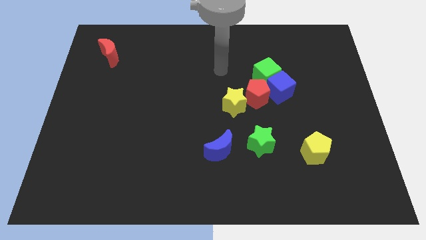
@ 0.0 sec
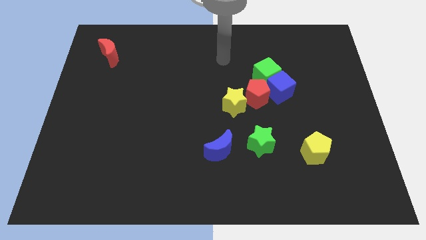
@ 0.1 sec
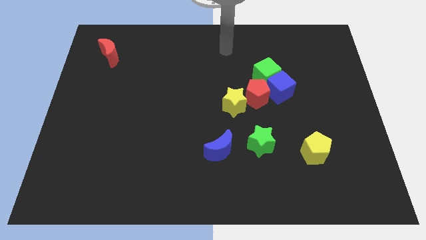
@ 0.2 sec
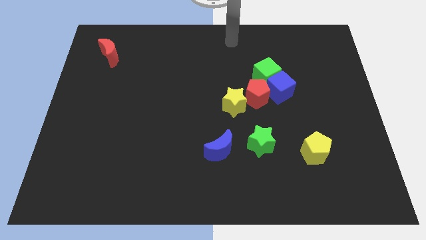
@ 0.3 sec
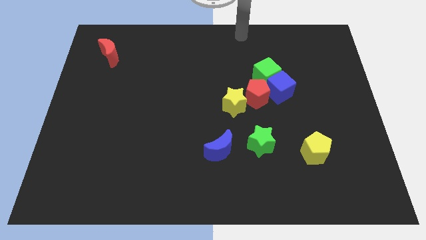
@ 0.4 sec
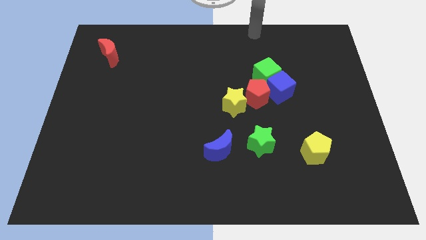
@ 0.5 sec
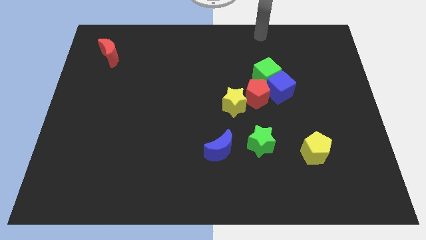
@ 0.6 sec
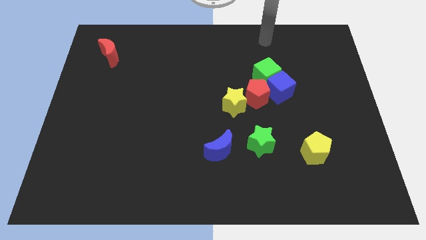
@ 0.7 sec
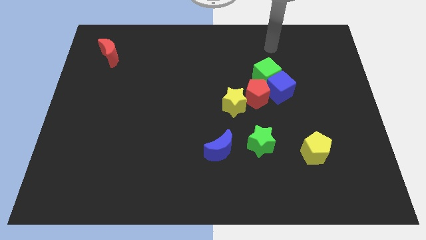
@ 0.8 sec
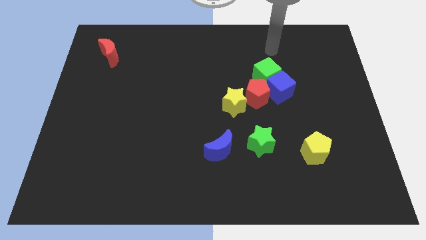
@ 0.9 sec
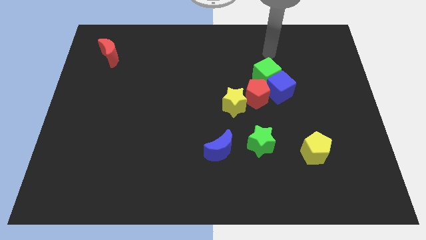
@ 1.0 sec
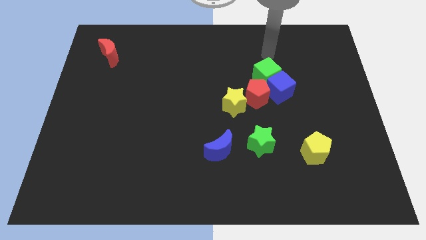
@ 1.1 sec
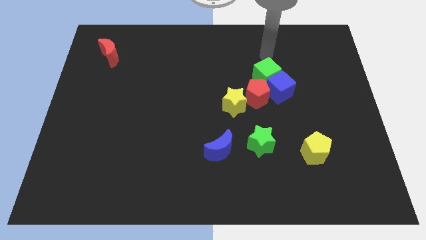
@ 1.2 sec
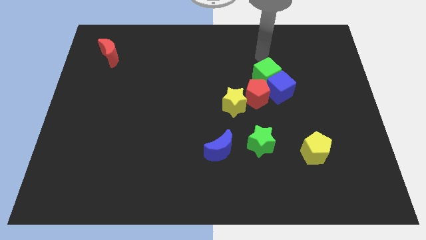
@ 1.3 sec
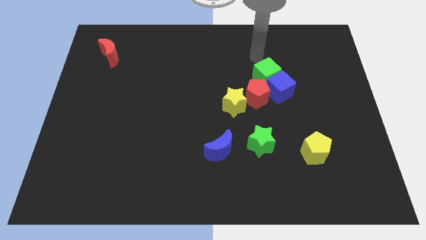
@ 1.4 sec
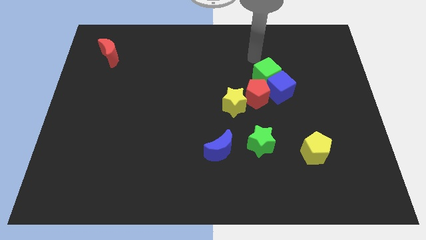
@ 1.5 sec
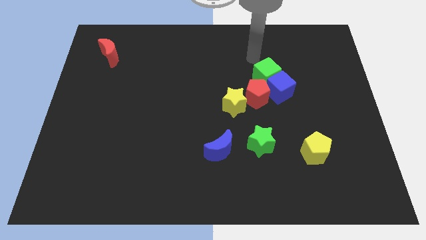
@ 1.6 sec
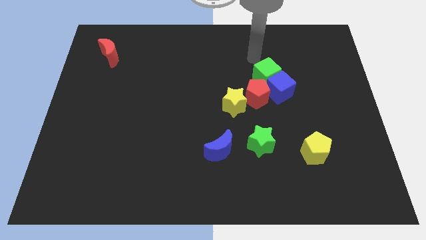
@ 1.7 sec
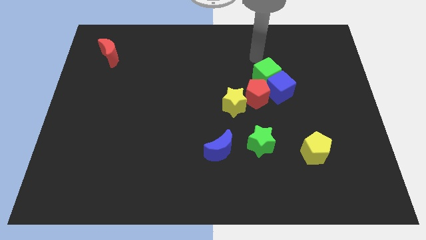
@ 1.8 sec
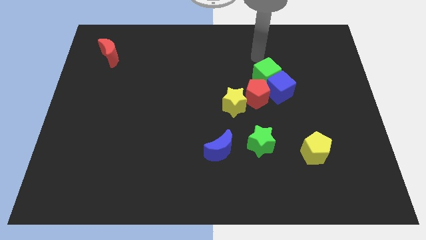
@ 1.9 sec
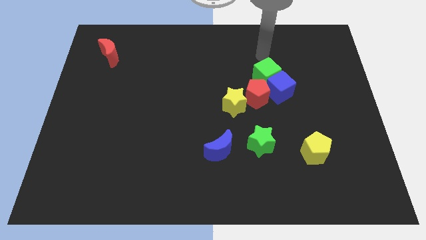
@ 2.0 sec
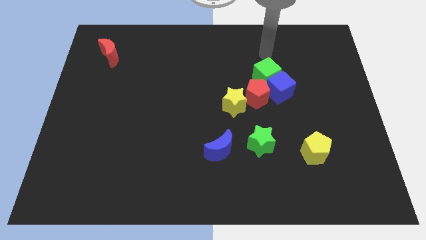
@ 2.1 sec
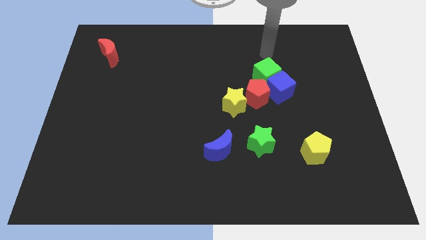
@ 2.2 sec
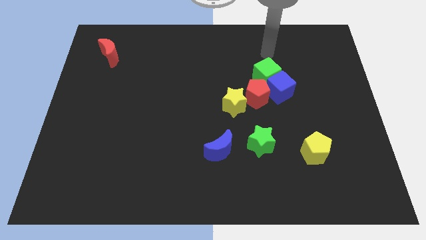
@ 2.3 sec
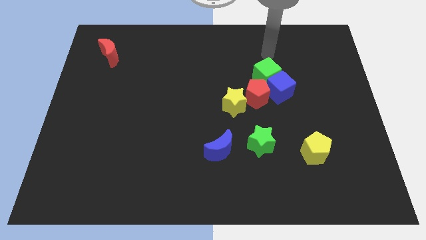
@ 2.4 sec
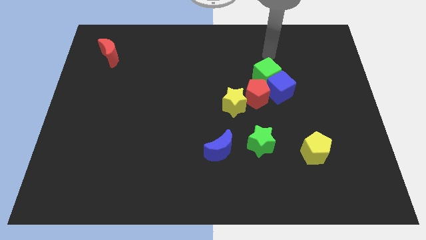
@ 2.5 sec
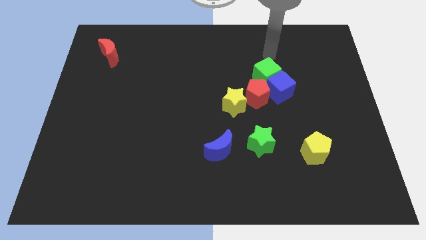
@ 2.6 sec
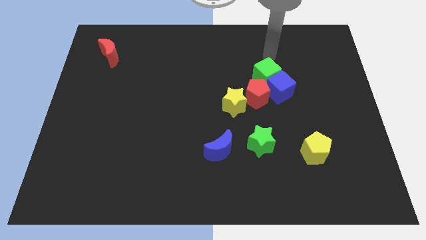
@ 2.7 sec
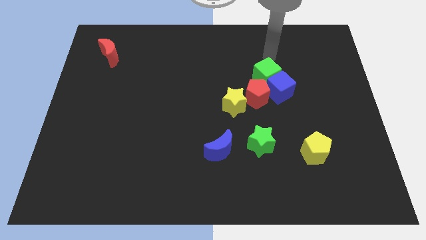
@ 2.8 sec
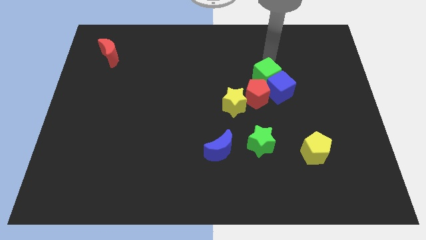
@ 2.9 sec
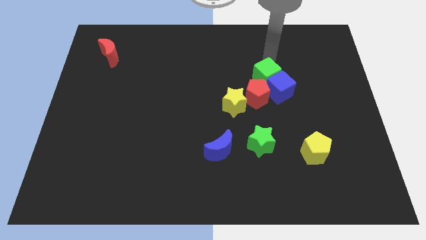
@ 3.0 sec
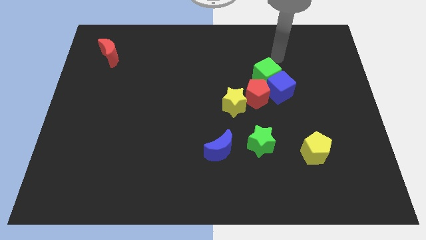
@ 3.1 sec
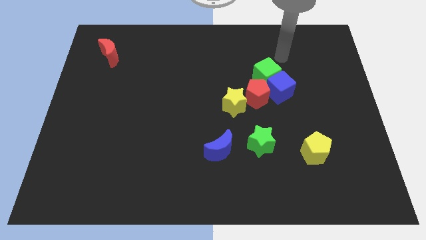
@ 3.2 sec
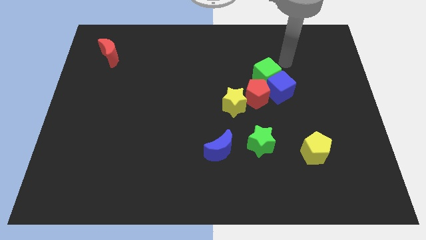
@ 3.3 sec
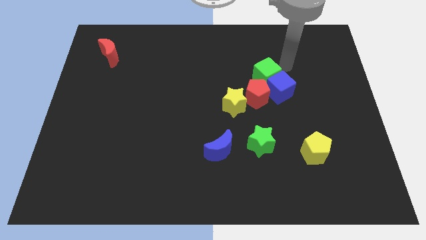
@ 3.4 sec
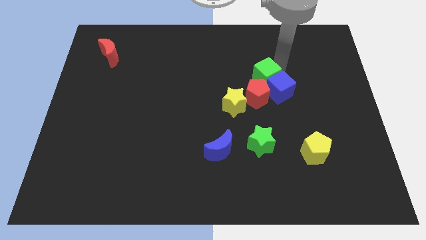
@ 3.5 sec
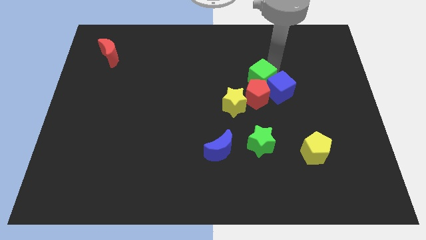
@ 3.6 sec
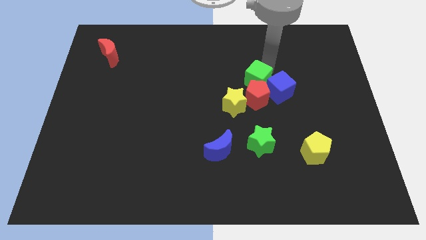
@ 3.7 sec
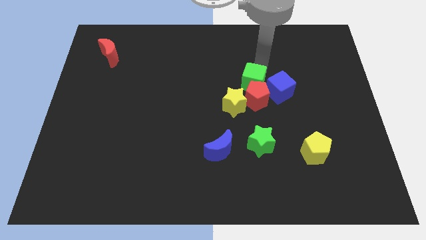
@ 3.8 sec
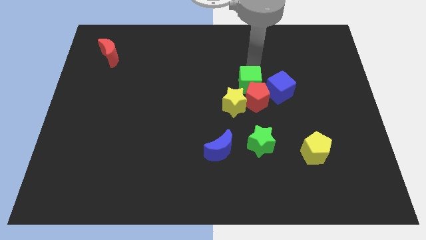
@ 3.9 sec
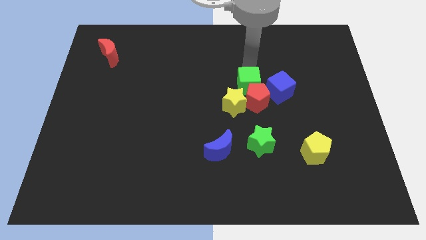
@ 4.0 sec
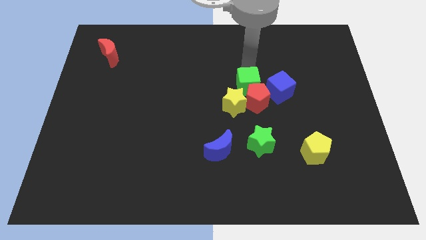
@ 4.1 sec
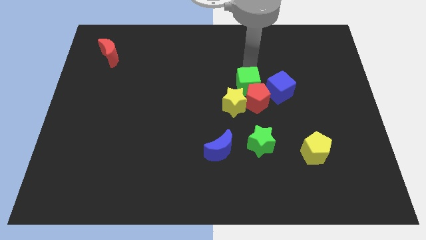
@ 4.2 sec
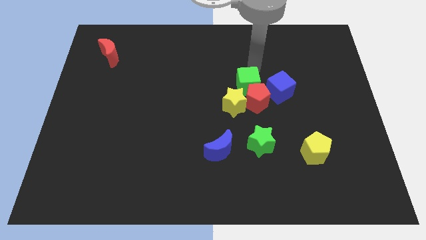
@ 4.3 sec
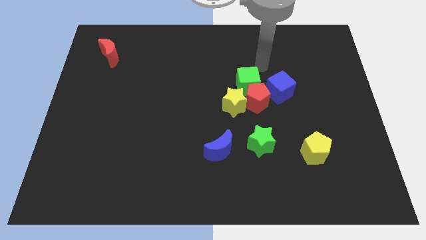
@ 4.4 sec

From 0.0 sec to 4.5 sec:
move the green cube into the red pentagon

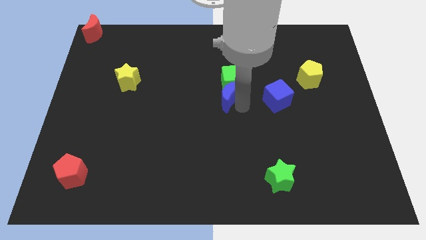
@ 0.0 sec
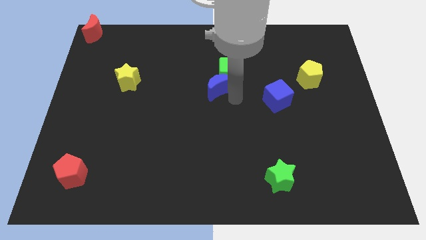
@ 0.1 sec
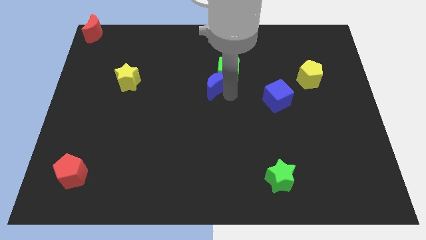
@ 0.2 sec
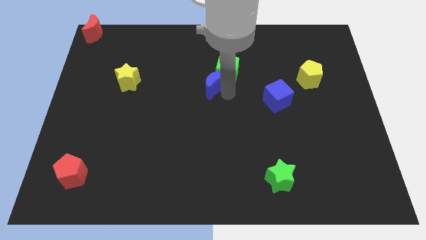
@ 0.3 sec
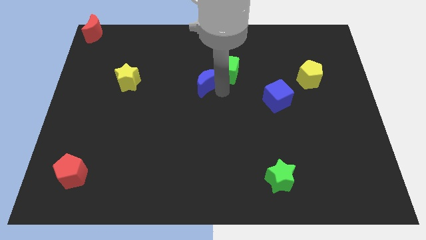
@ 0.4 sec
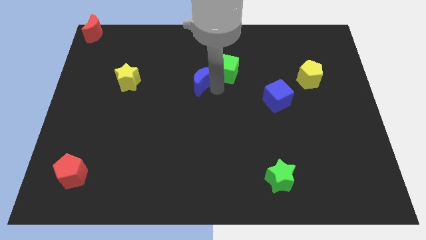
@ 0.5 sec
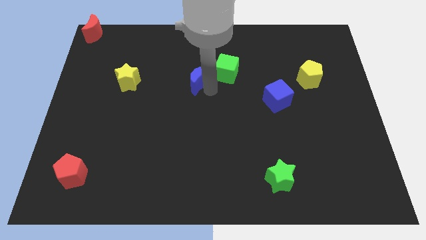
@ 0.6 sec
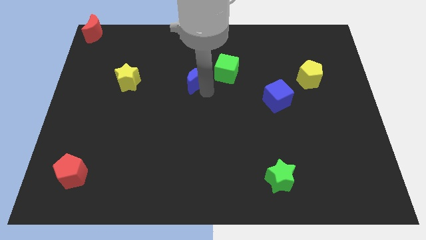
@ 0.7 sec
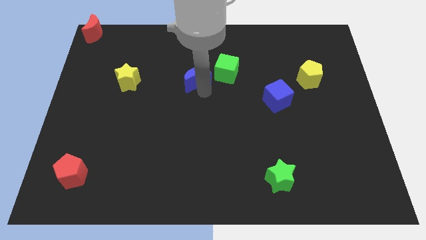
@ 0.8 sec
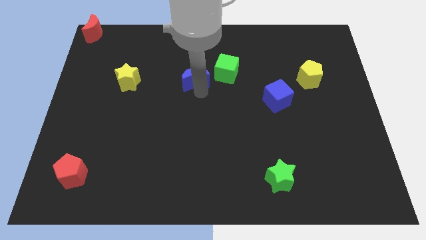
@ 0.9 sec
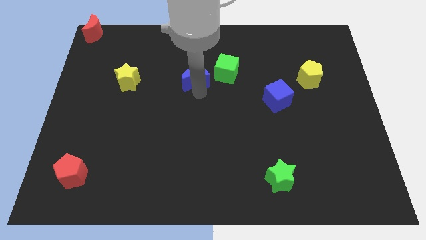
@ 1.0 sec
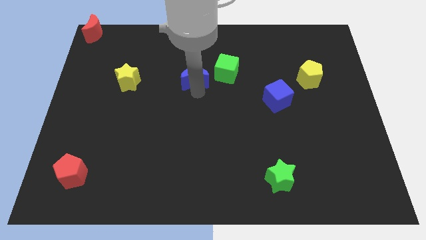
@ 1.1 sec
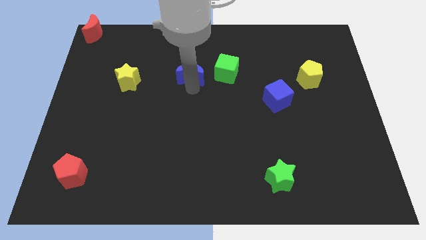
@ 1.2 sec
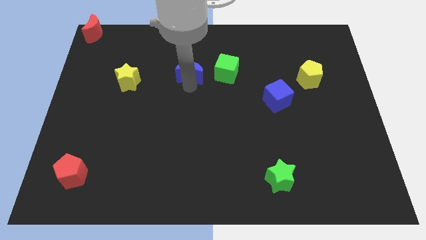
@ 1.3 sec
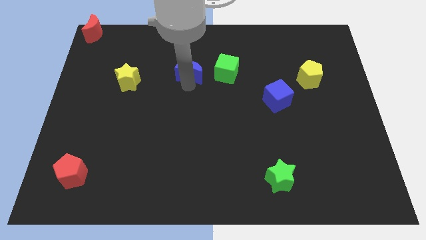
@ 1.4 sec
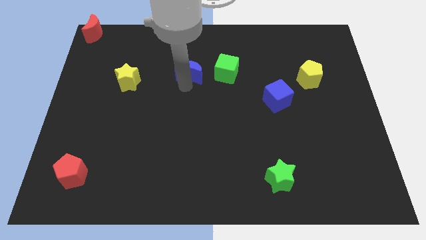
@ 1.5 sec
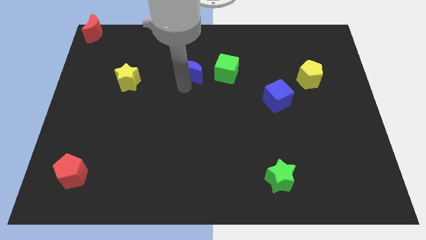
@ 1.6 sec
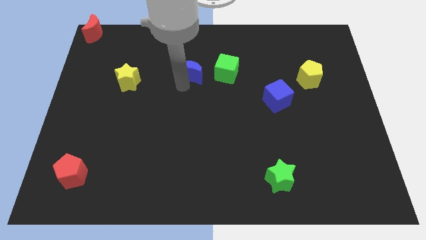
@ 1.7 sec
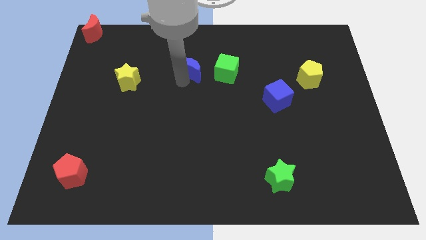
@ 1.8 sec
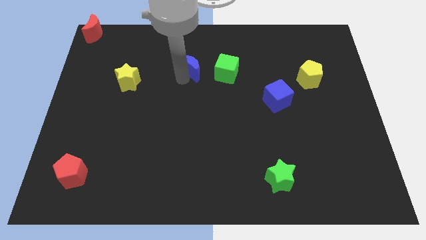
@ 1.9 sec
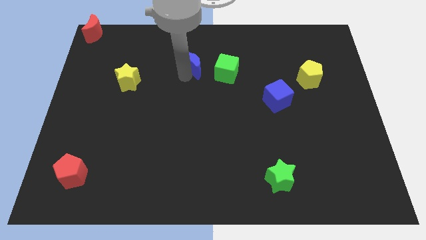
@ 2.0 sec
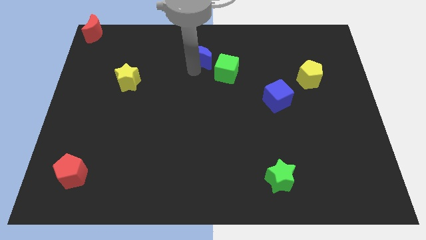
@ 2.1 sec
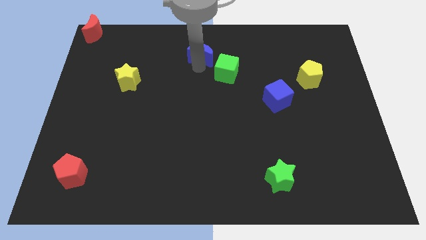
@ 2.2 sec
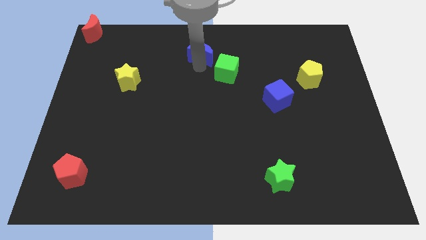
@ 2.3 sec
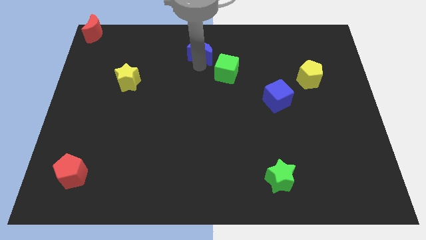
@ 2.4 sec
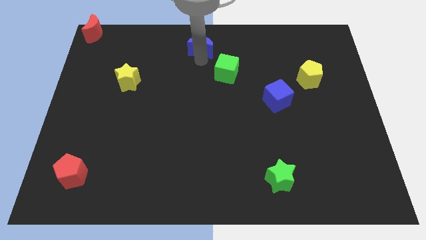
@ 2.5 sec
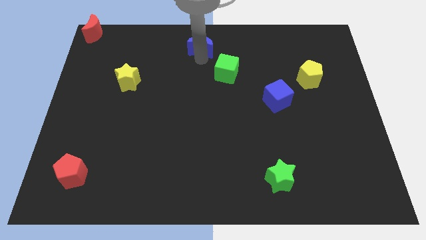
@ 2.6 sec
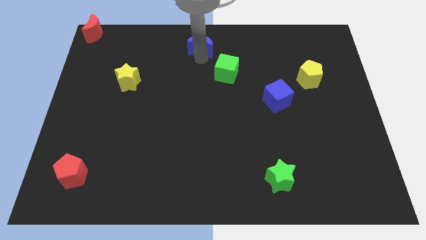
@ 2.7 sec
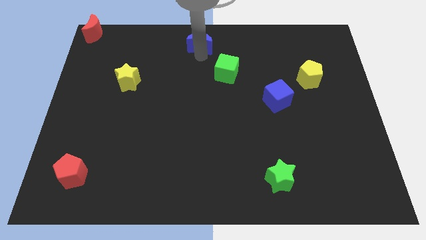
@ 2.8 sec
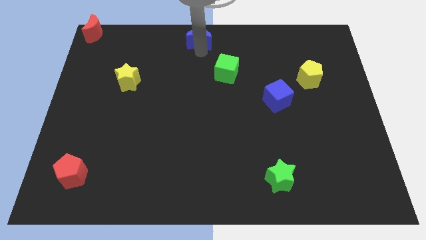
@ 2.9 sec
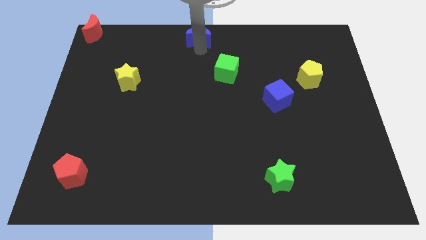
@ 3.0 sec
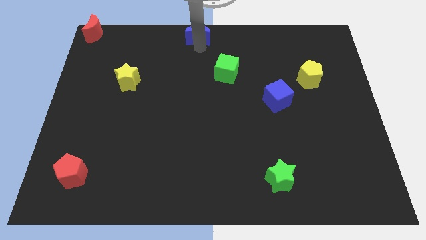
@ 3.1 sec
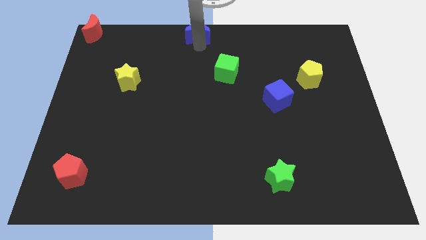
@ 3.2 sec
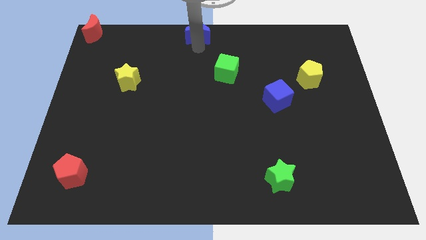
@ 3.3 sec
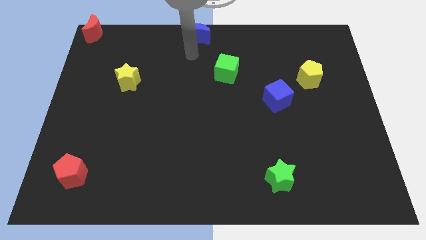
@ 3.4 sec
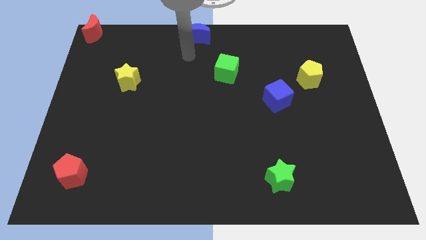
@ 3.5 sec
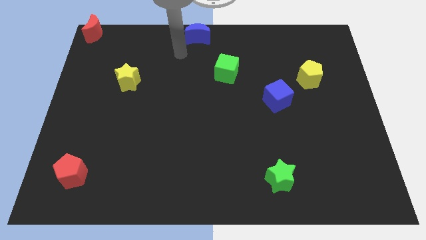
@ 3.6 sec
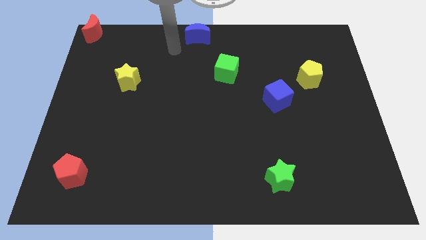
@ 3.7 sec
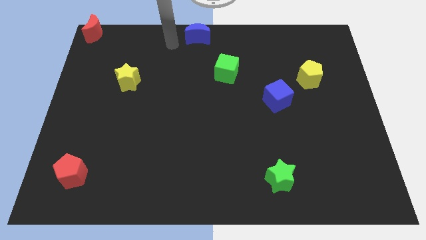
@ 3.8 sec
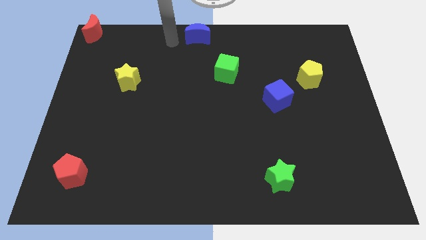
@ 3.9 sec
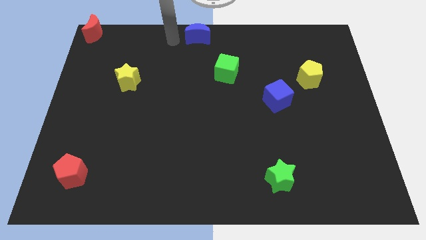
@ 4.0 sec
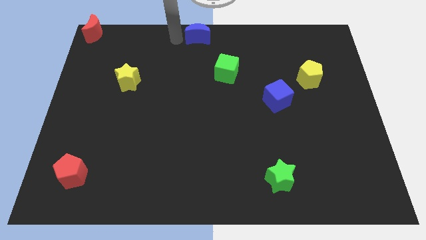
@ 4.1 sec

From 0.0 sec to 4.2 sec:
drag the blue moon towards the top center of the board

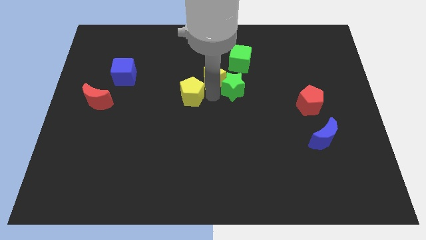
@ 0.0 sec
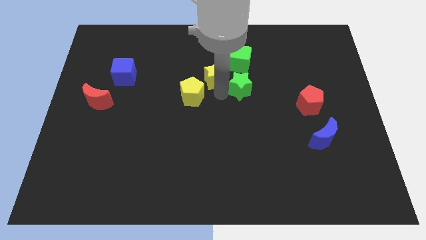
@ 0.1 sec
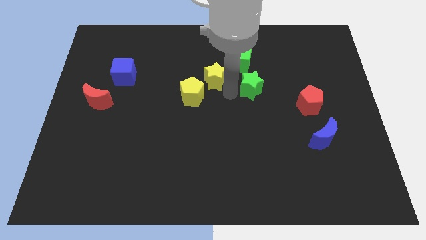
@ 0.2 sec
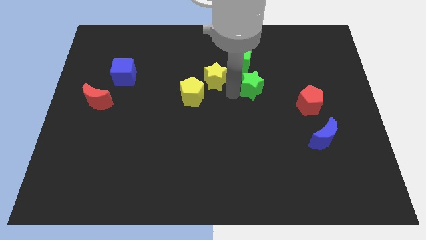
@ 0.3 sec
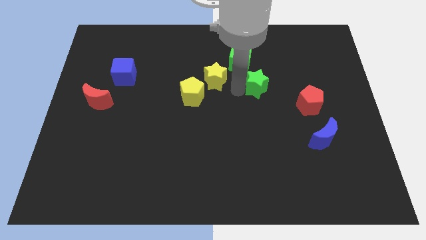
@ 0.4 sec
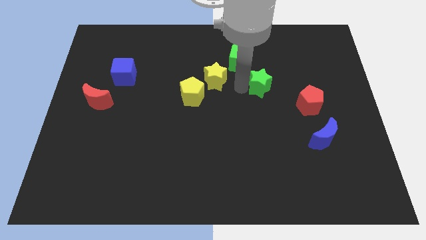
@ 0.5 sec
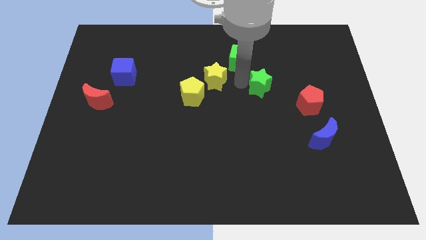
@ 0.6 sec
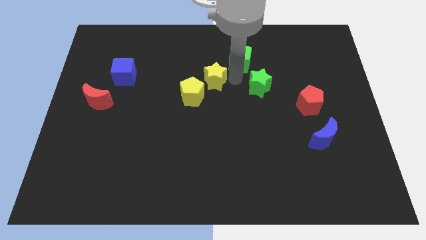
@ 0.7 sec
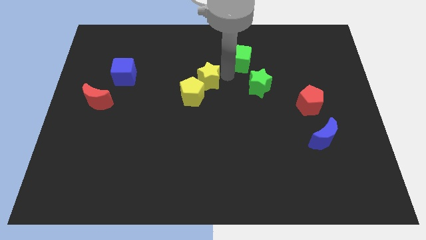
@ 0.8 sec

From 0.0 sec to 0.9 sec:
place the green star towards the bottom right side of the green cube
